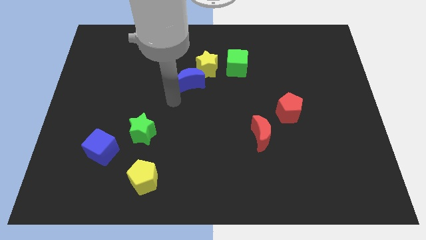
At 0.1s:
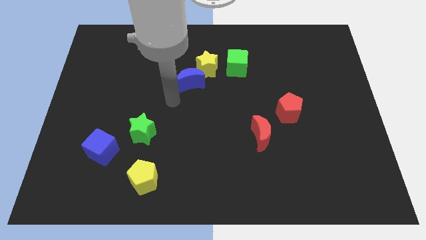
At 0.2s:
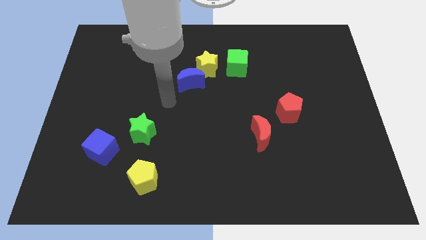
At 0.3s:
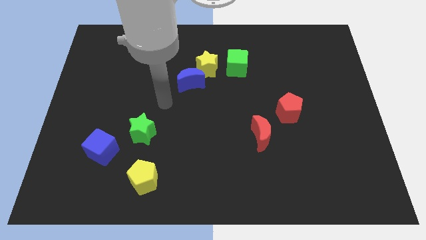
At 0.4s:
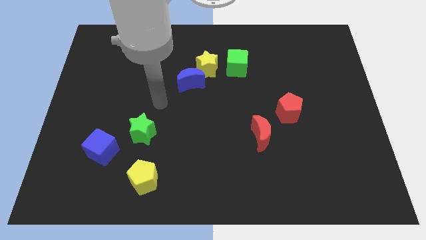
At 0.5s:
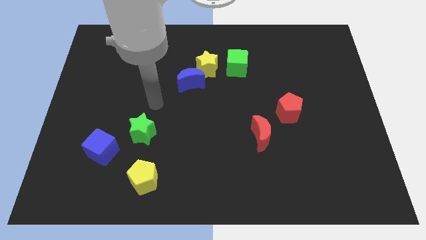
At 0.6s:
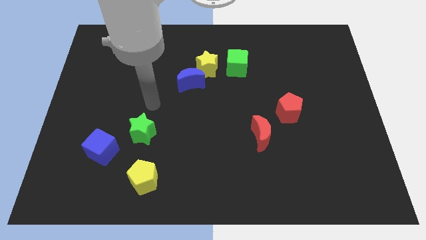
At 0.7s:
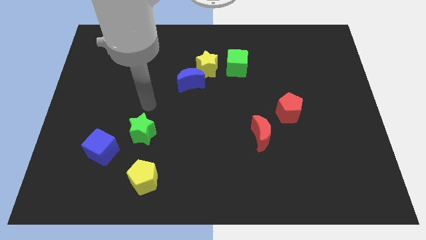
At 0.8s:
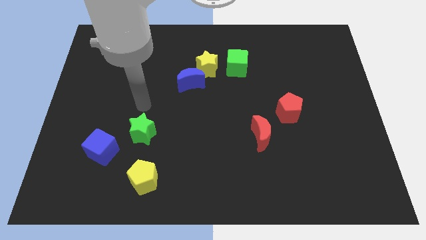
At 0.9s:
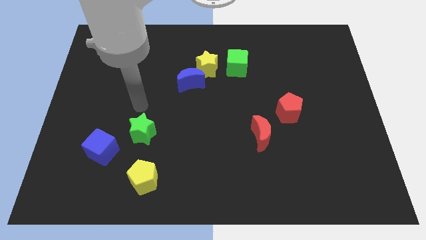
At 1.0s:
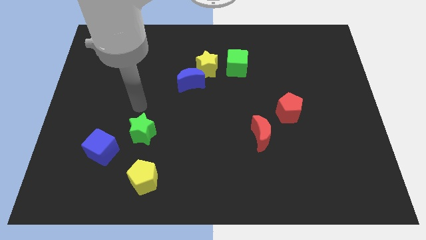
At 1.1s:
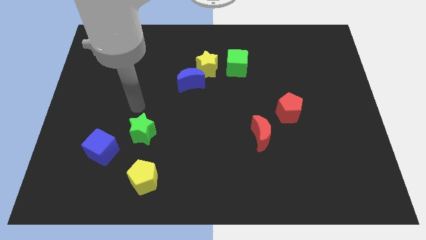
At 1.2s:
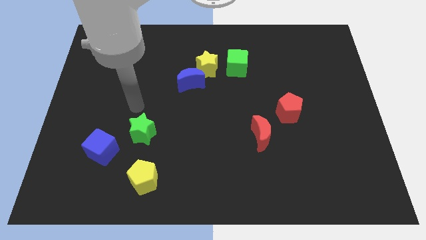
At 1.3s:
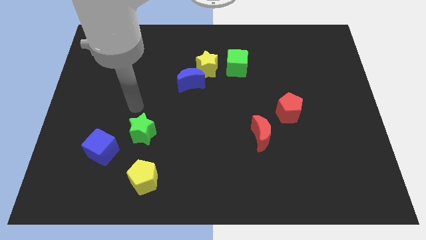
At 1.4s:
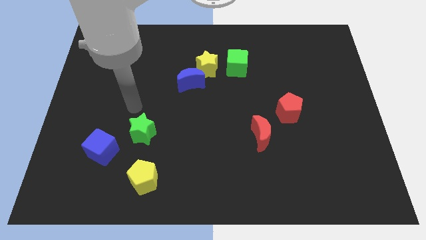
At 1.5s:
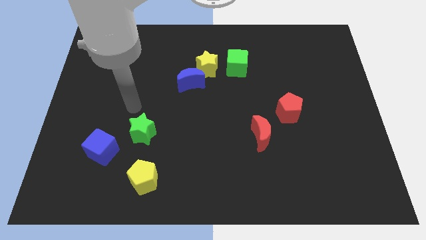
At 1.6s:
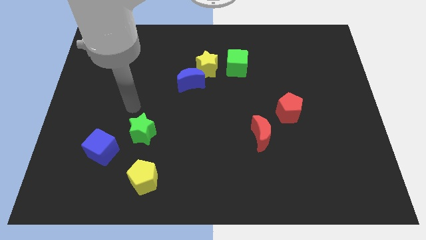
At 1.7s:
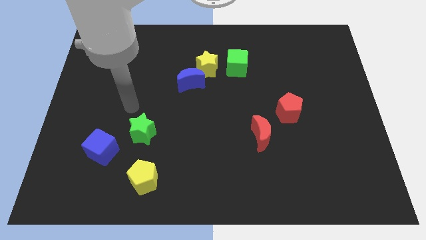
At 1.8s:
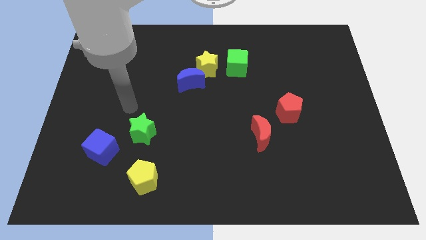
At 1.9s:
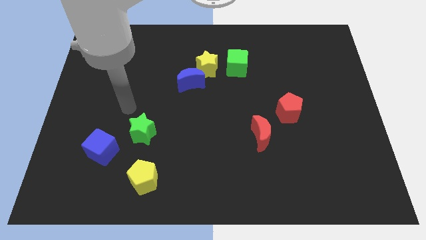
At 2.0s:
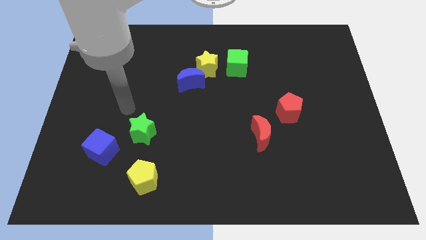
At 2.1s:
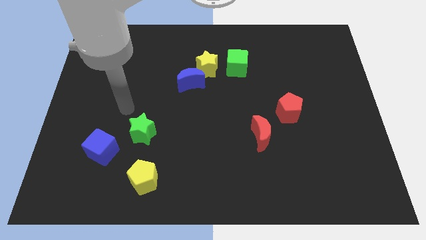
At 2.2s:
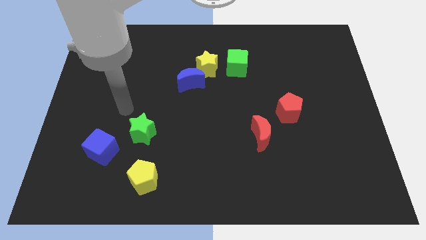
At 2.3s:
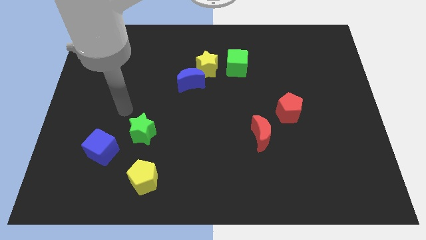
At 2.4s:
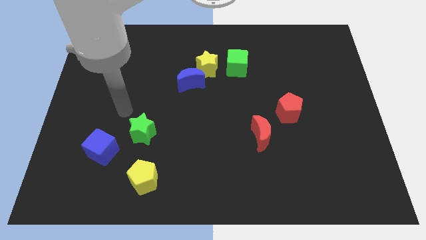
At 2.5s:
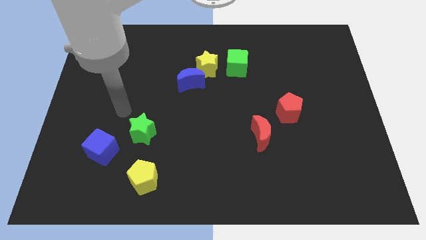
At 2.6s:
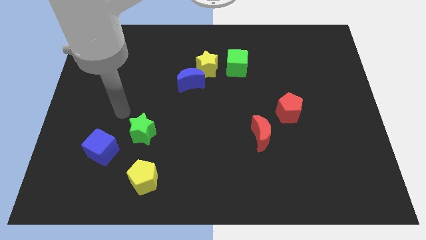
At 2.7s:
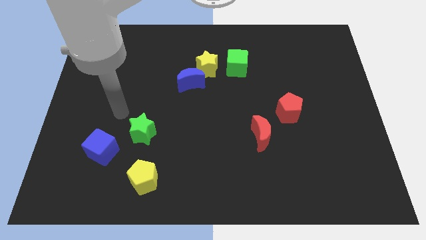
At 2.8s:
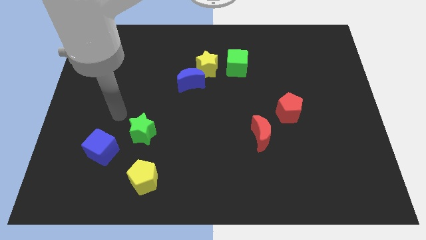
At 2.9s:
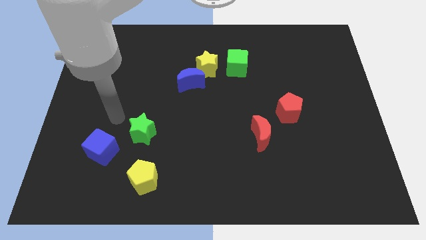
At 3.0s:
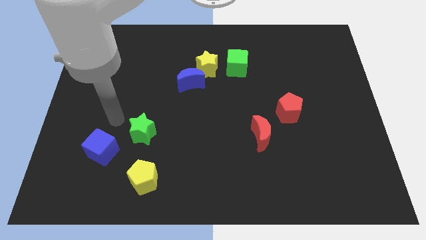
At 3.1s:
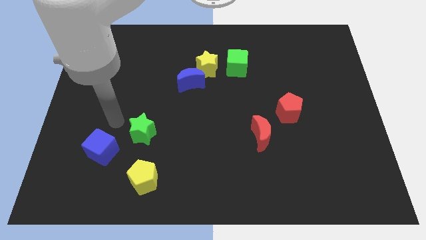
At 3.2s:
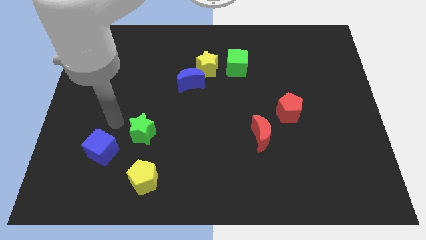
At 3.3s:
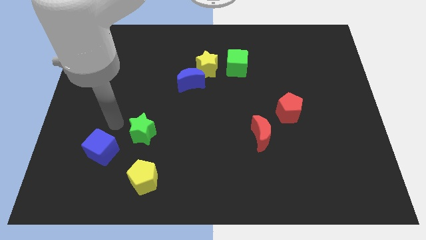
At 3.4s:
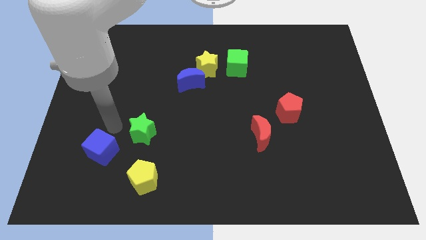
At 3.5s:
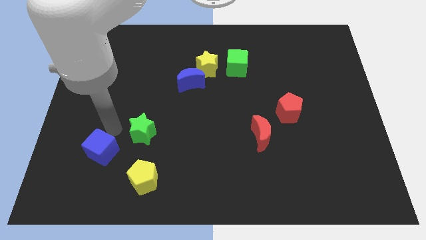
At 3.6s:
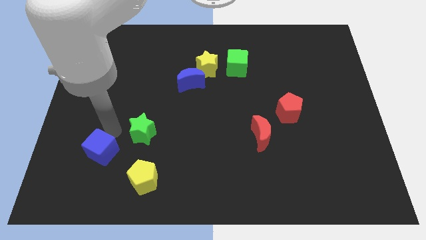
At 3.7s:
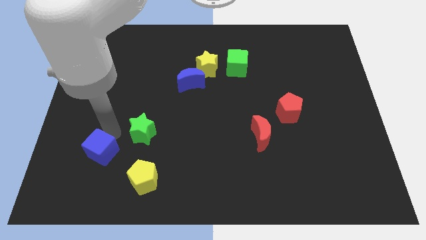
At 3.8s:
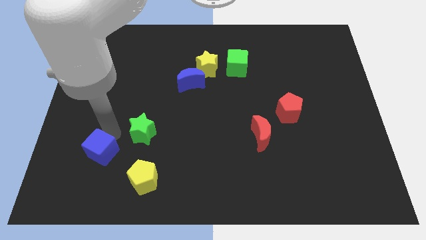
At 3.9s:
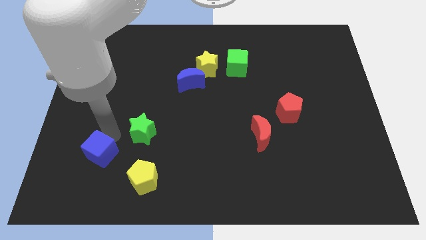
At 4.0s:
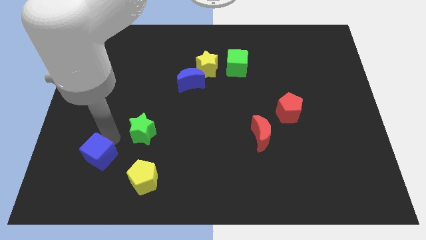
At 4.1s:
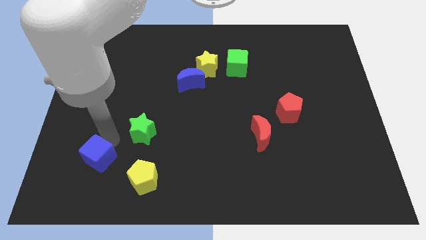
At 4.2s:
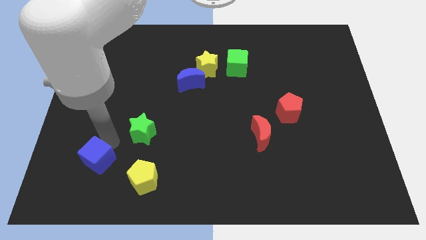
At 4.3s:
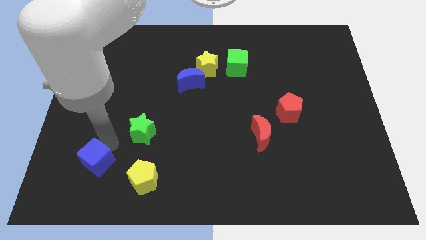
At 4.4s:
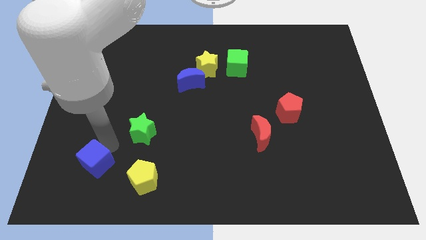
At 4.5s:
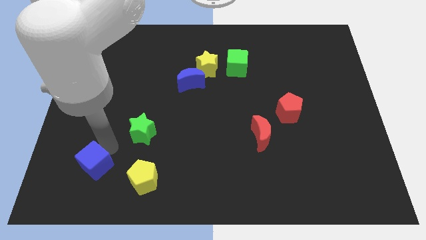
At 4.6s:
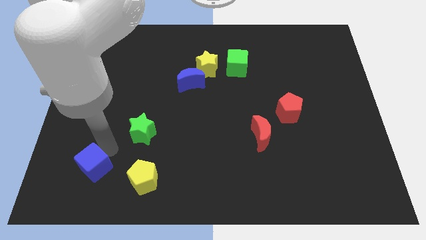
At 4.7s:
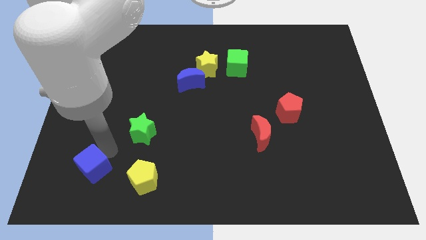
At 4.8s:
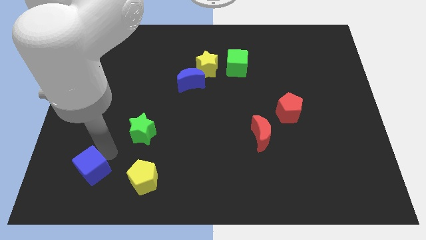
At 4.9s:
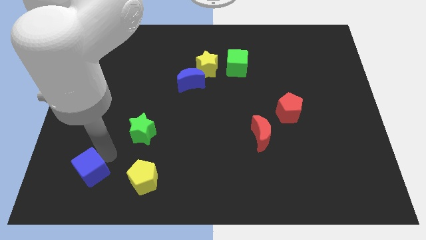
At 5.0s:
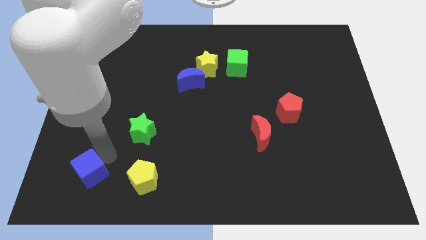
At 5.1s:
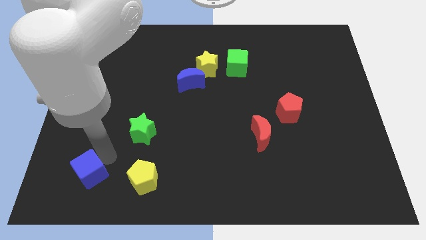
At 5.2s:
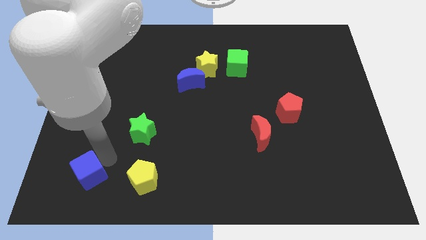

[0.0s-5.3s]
push the blue cube to the left of the yellow pentagon

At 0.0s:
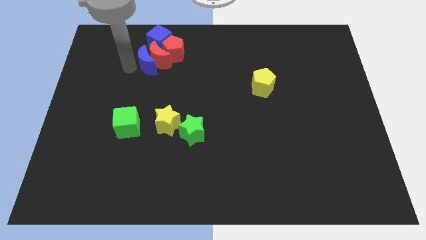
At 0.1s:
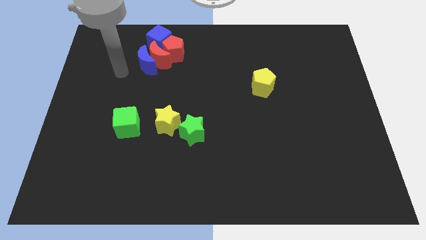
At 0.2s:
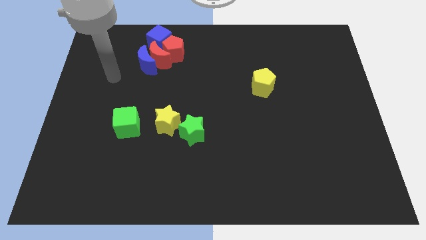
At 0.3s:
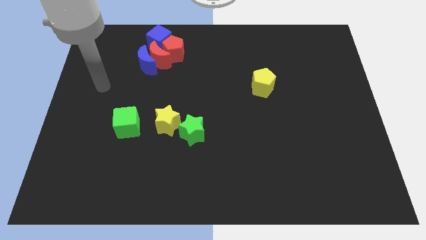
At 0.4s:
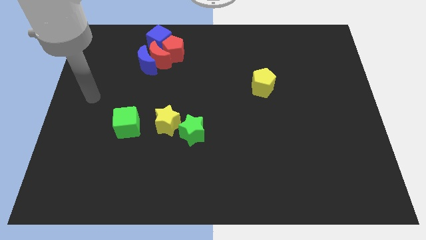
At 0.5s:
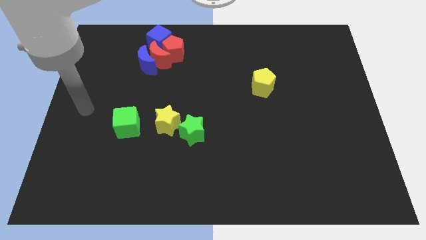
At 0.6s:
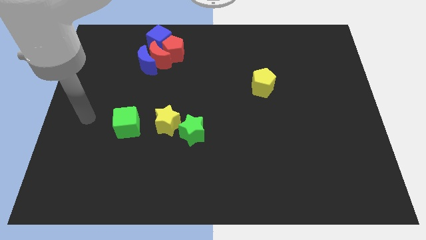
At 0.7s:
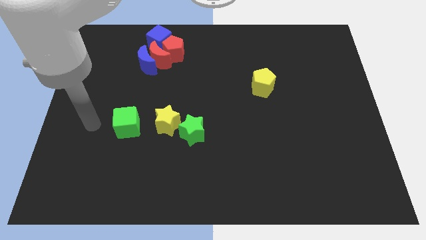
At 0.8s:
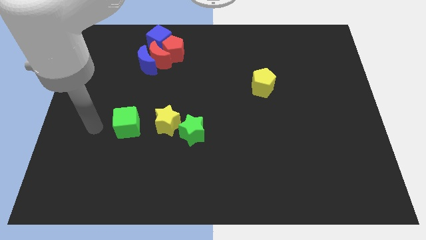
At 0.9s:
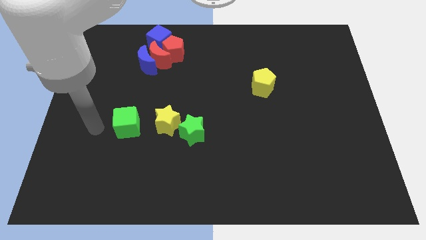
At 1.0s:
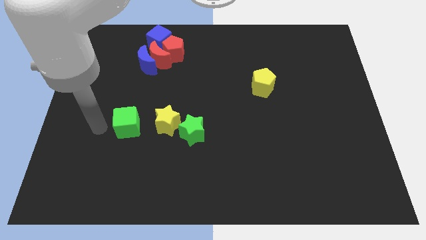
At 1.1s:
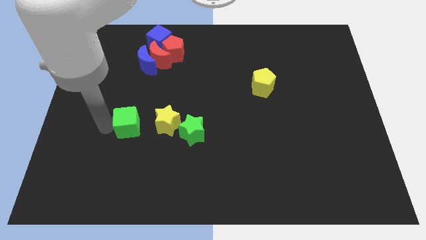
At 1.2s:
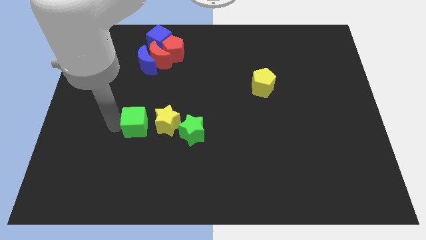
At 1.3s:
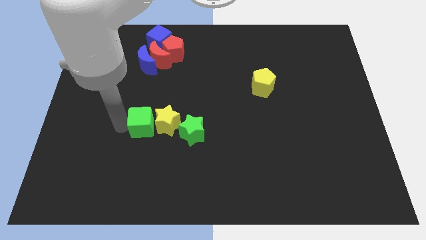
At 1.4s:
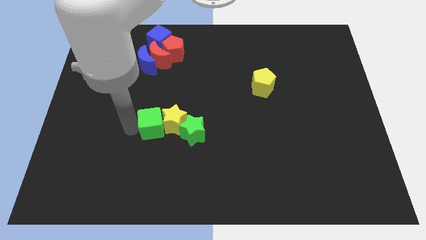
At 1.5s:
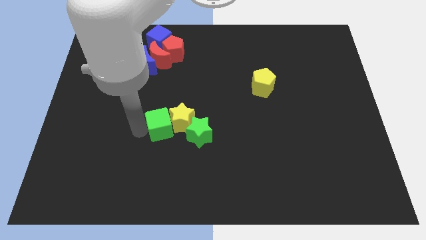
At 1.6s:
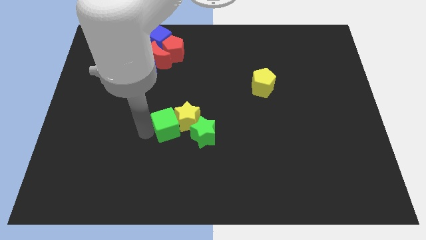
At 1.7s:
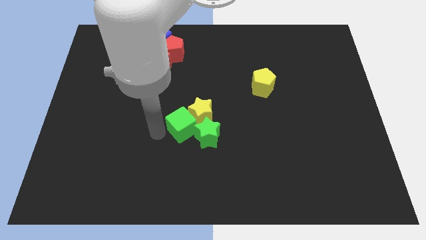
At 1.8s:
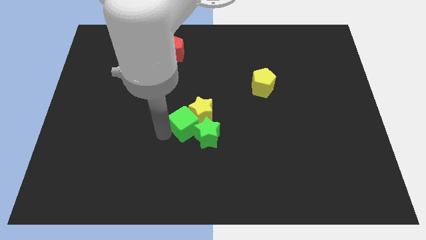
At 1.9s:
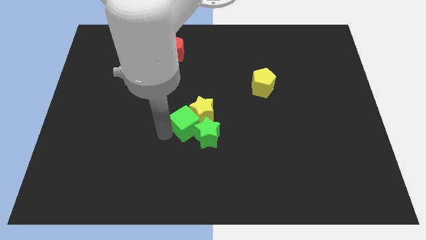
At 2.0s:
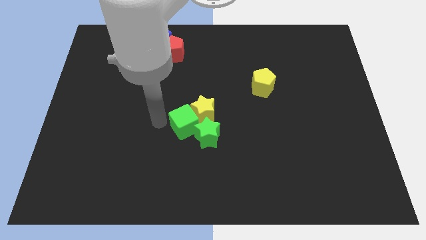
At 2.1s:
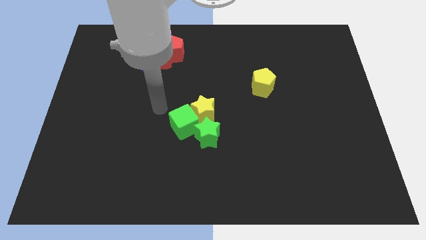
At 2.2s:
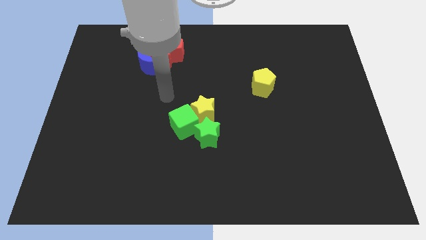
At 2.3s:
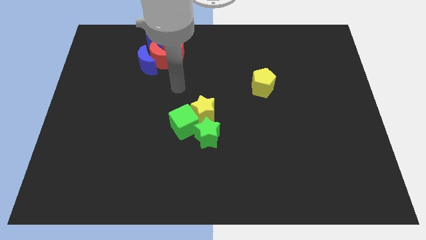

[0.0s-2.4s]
move the green cube into yellow star

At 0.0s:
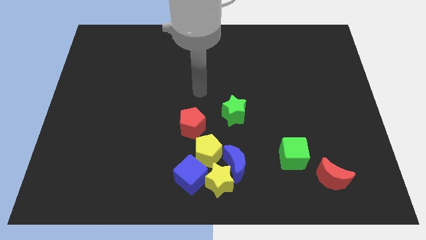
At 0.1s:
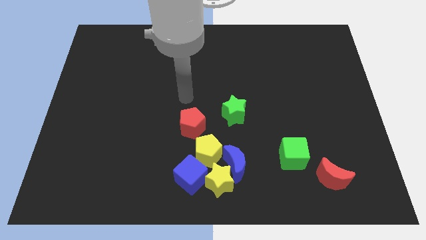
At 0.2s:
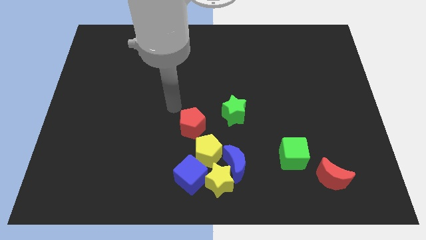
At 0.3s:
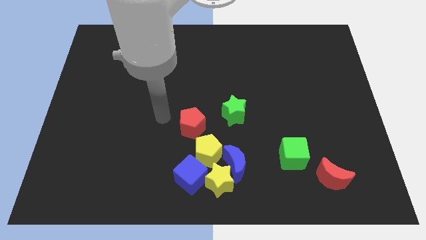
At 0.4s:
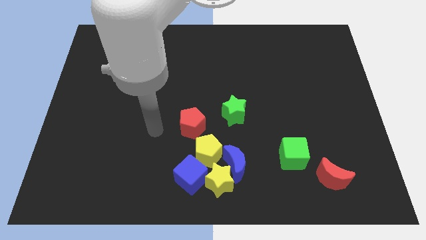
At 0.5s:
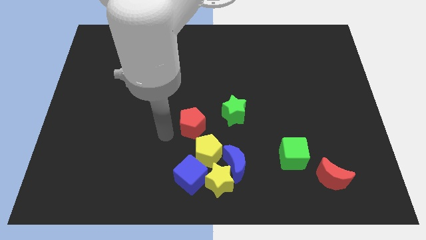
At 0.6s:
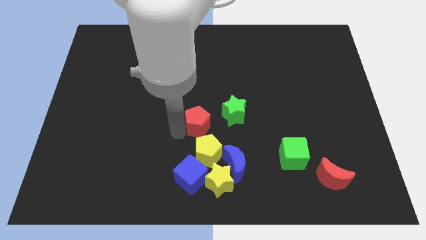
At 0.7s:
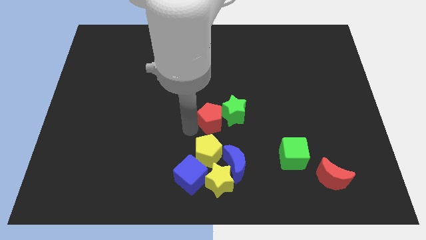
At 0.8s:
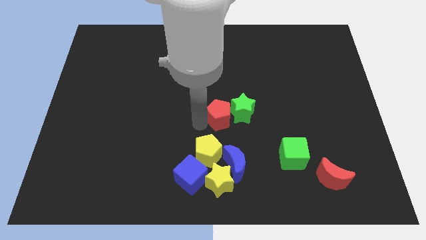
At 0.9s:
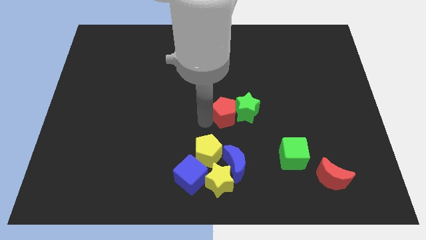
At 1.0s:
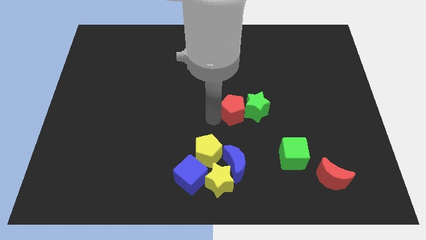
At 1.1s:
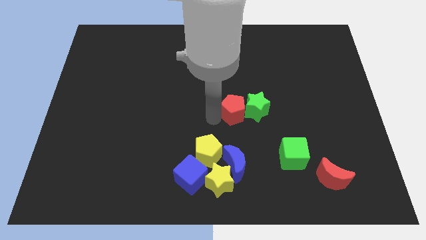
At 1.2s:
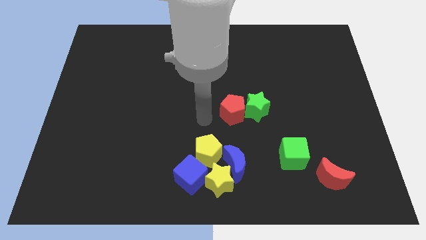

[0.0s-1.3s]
push red pentagon into the green star
